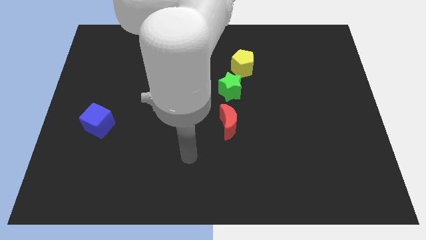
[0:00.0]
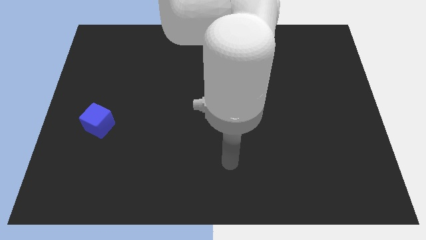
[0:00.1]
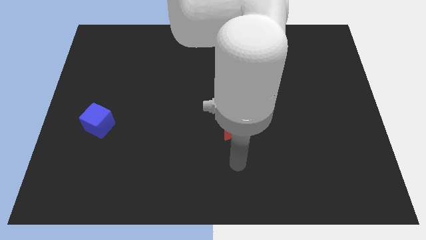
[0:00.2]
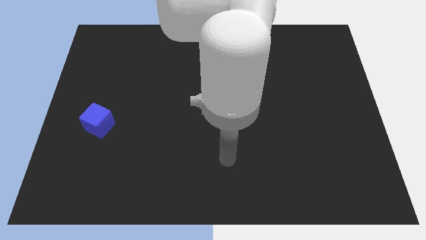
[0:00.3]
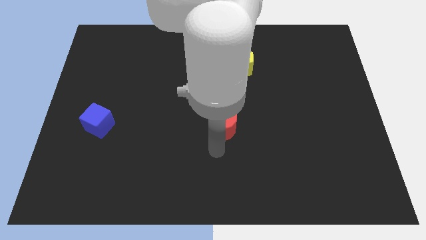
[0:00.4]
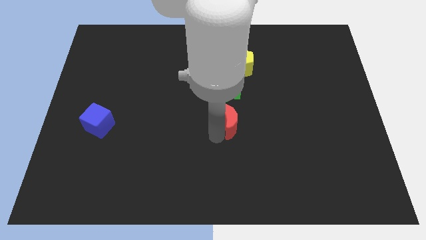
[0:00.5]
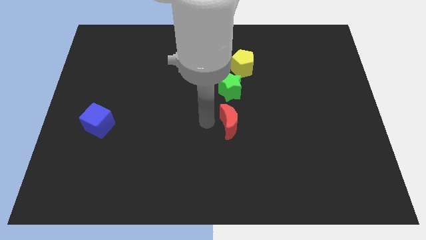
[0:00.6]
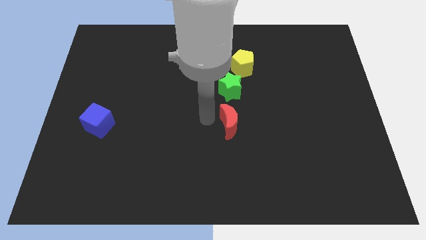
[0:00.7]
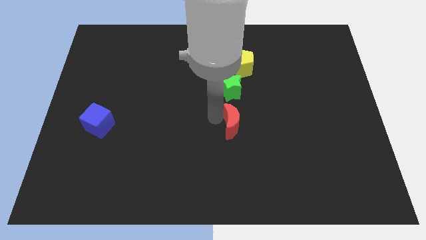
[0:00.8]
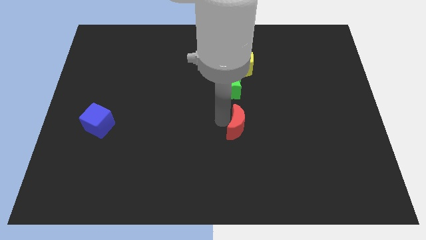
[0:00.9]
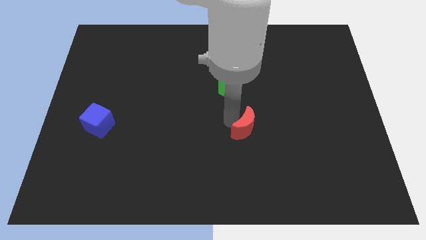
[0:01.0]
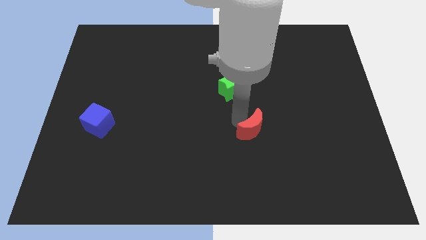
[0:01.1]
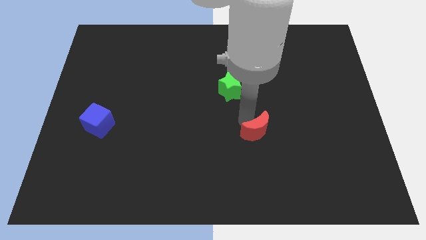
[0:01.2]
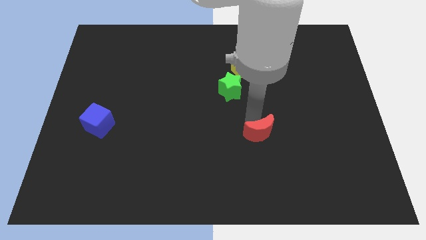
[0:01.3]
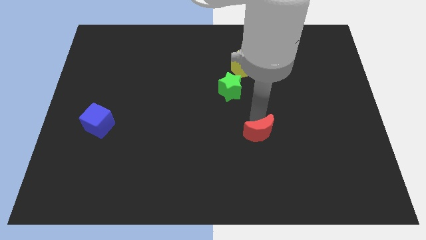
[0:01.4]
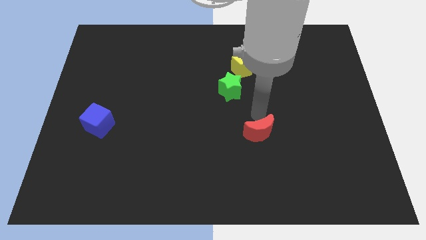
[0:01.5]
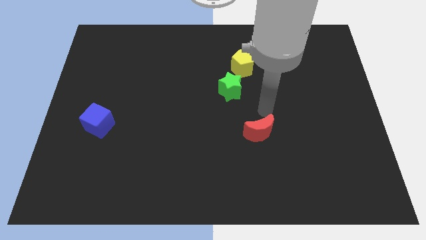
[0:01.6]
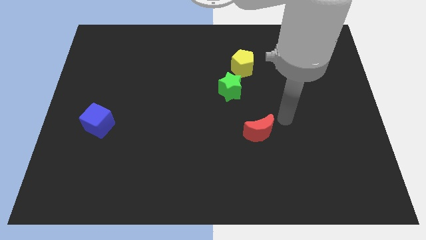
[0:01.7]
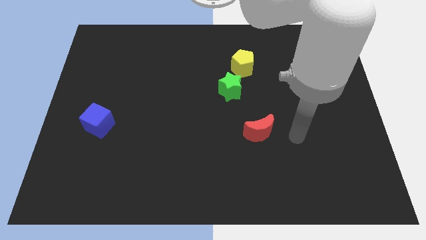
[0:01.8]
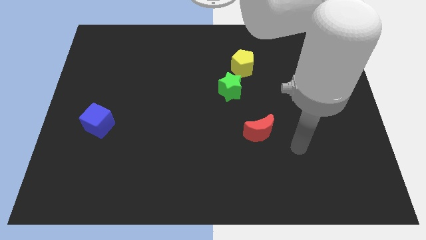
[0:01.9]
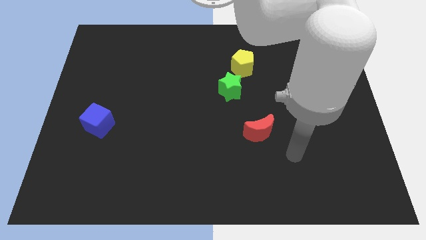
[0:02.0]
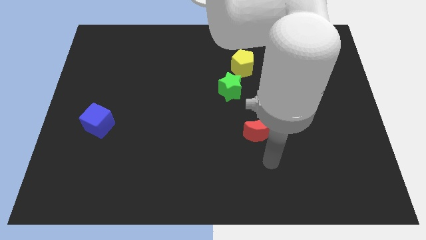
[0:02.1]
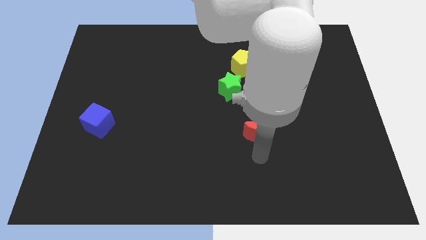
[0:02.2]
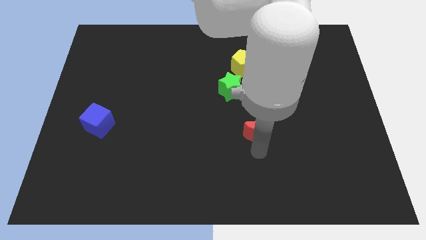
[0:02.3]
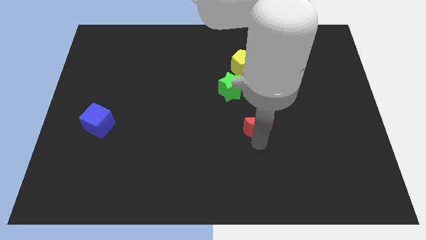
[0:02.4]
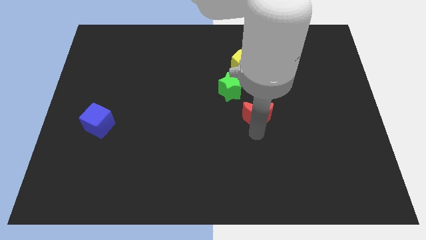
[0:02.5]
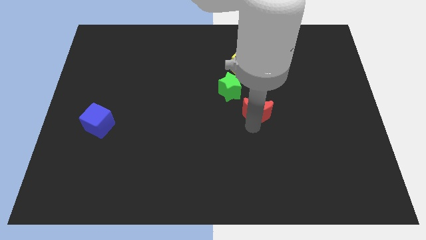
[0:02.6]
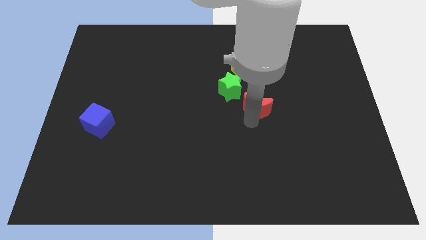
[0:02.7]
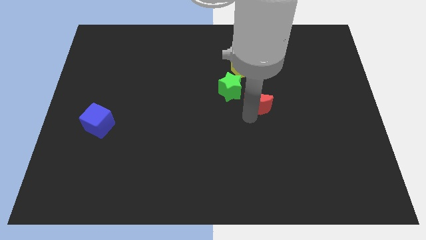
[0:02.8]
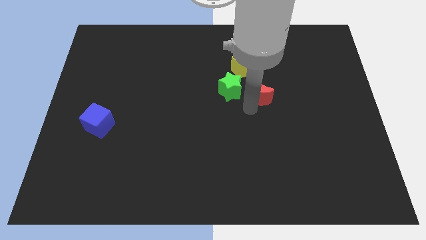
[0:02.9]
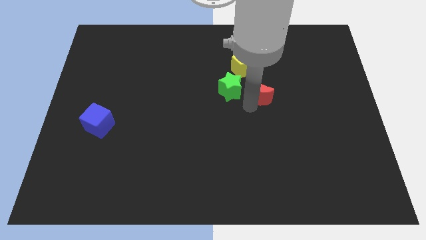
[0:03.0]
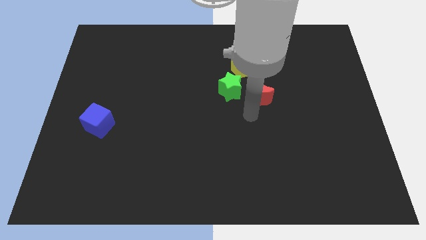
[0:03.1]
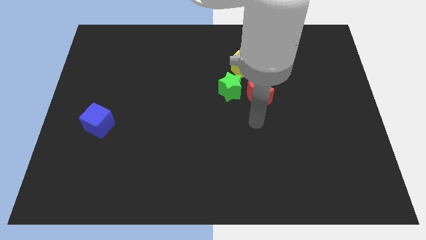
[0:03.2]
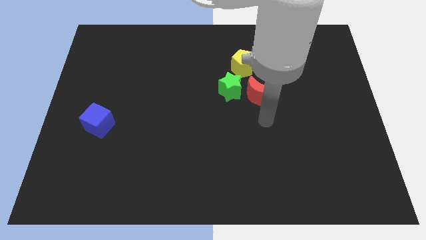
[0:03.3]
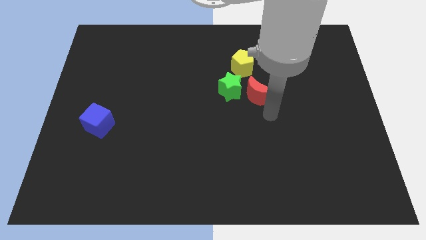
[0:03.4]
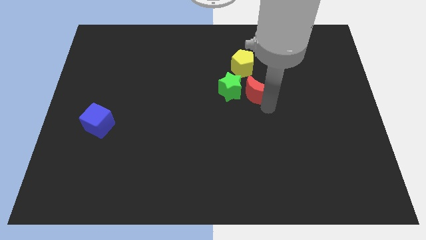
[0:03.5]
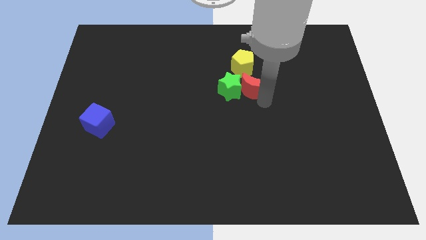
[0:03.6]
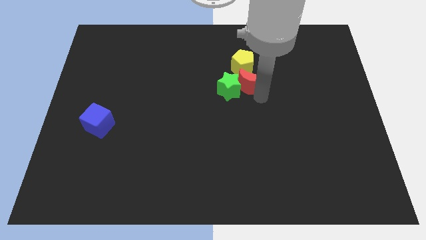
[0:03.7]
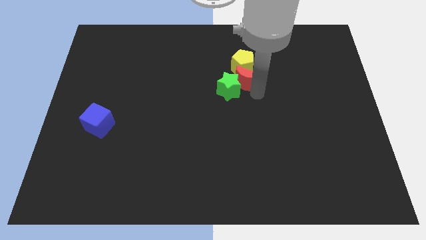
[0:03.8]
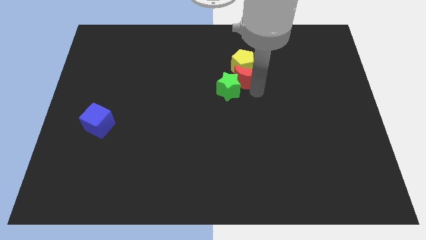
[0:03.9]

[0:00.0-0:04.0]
slide the red block next to the pentagon

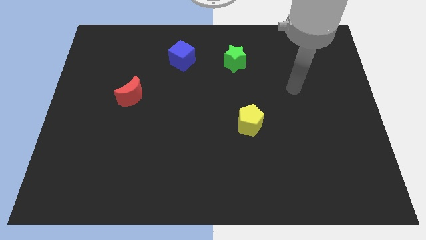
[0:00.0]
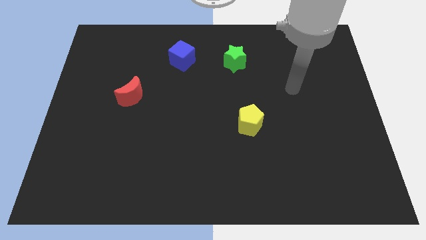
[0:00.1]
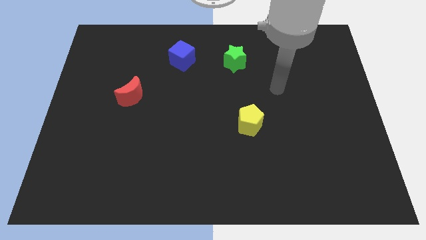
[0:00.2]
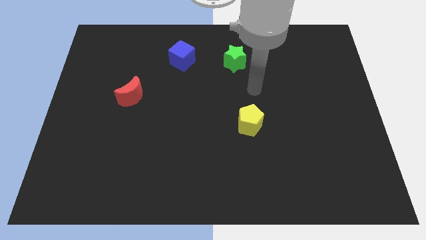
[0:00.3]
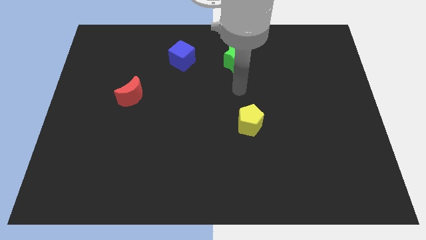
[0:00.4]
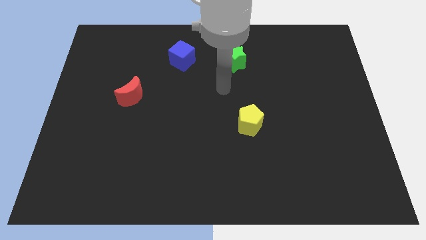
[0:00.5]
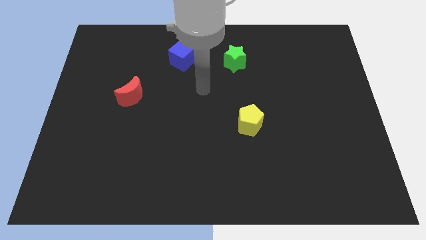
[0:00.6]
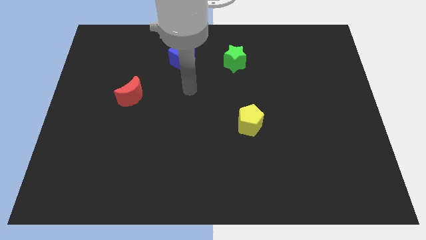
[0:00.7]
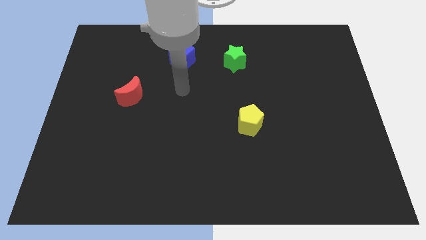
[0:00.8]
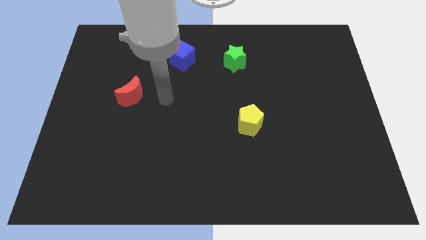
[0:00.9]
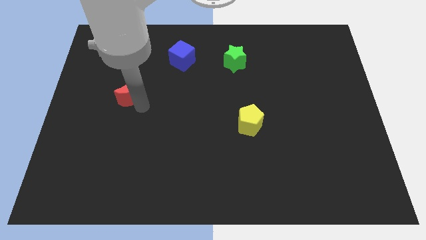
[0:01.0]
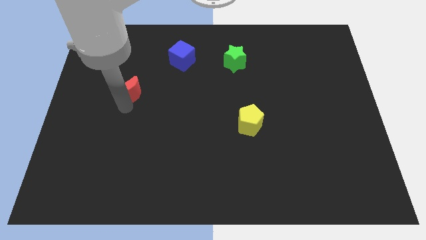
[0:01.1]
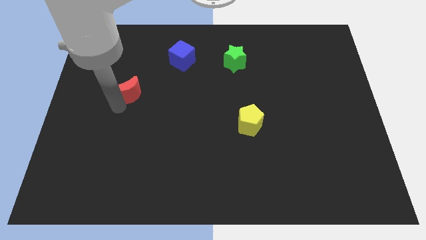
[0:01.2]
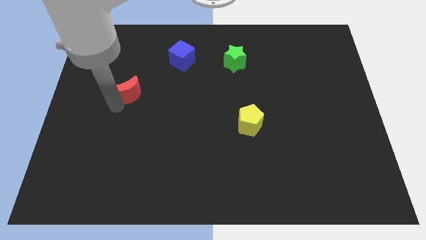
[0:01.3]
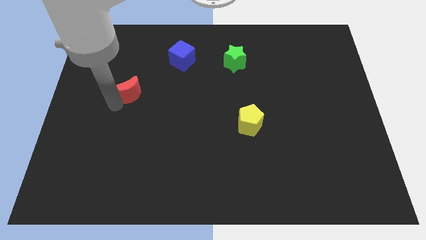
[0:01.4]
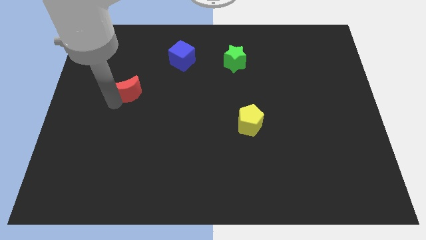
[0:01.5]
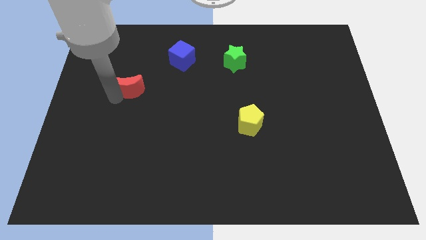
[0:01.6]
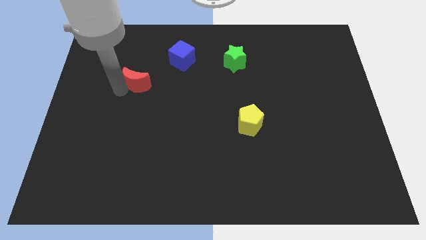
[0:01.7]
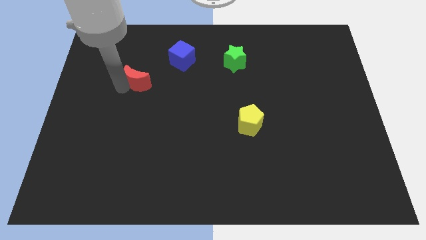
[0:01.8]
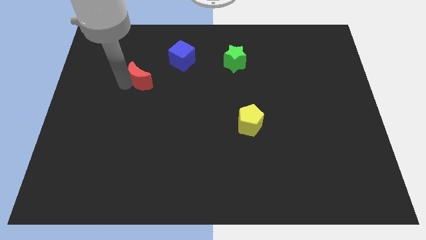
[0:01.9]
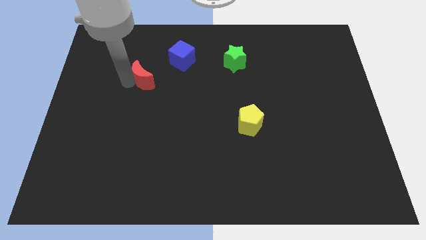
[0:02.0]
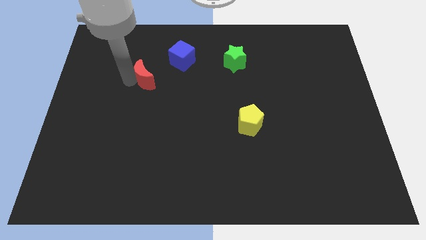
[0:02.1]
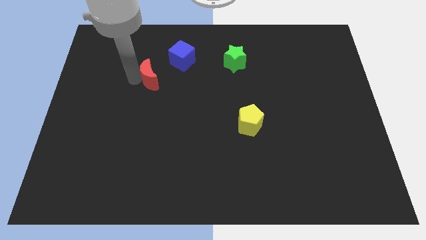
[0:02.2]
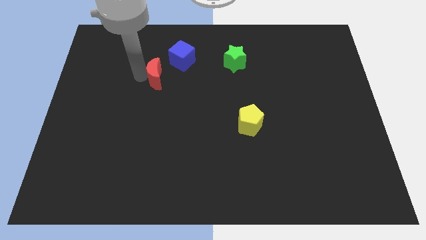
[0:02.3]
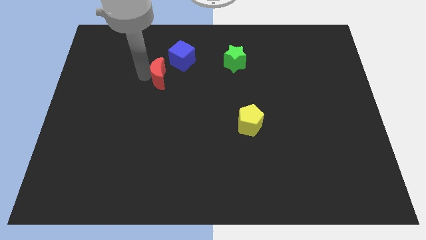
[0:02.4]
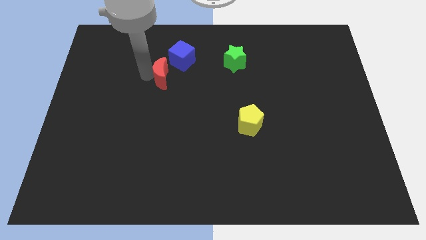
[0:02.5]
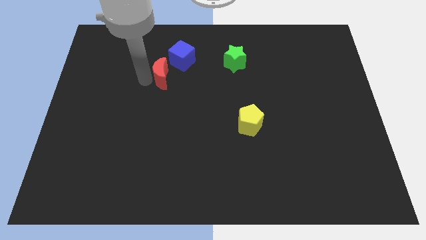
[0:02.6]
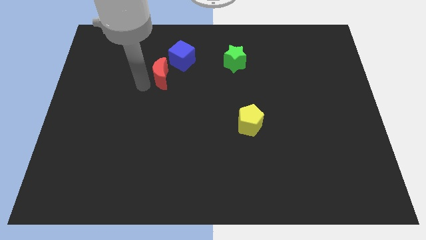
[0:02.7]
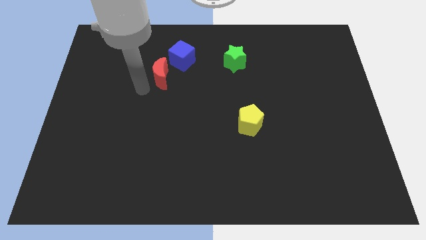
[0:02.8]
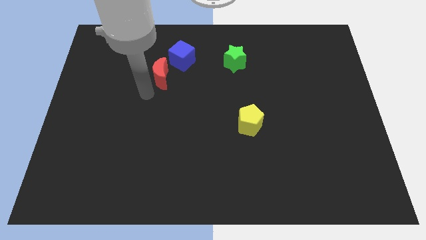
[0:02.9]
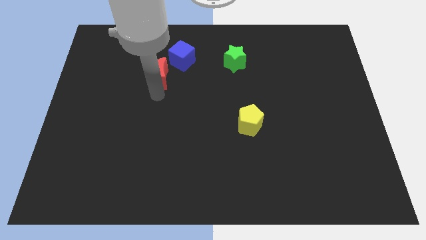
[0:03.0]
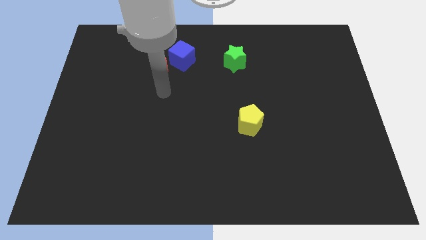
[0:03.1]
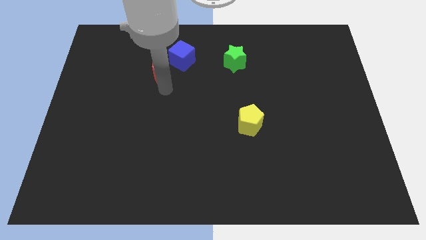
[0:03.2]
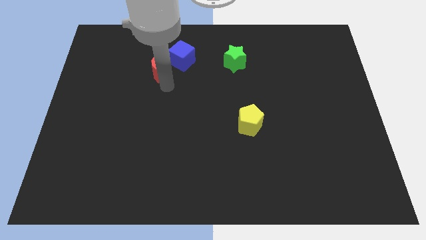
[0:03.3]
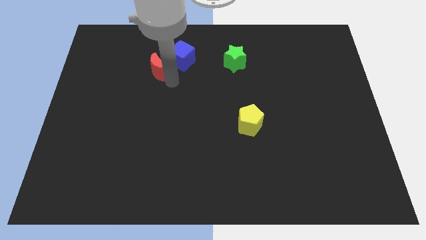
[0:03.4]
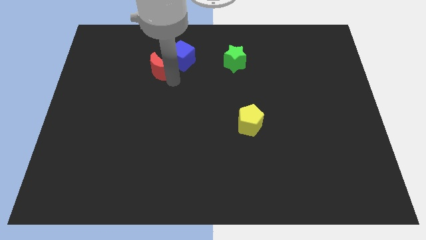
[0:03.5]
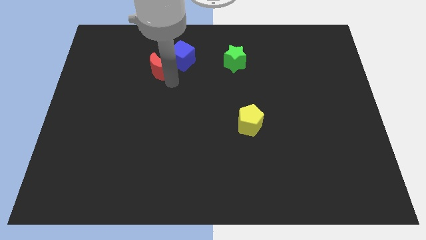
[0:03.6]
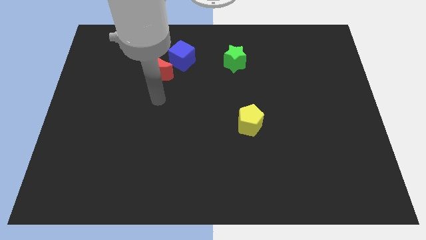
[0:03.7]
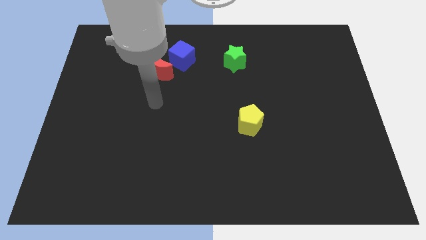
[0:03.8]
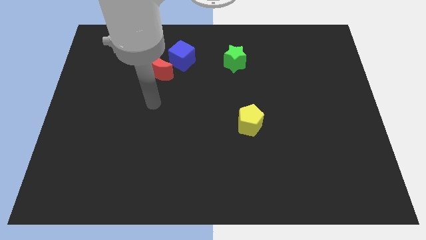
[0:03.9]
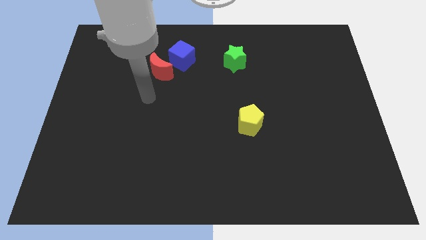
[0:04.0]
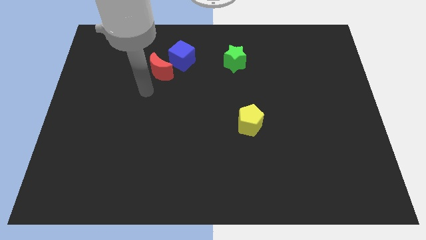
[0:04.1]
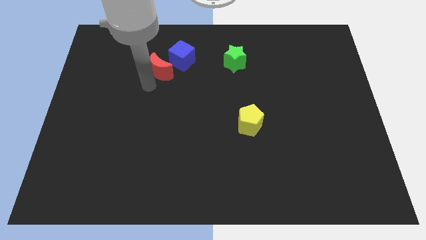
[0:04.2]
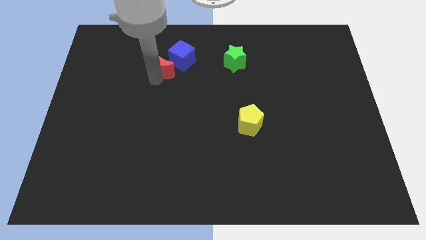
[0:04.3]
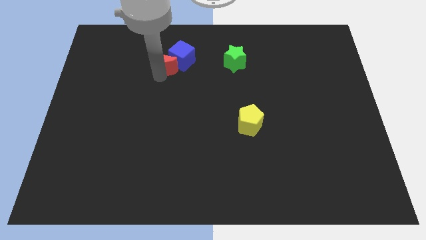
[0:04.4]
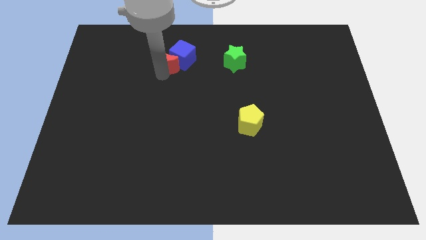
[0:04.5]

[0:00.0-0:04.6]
push the red moon to the cube

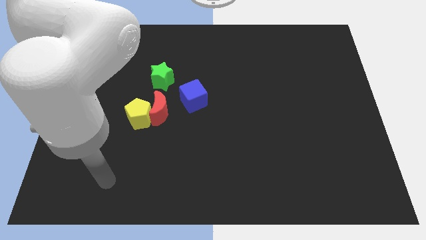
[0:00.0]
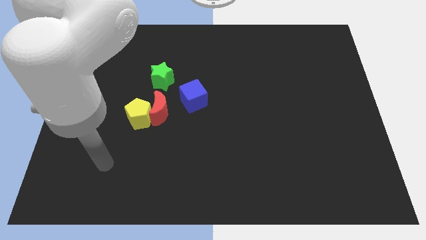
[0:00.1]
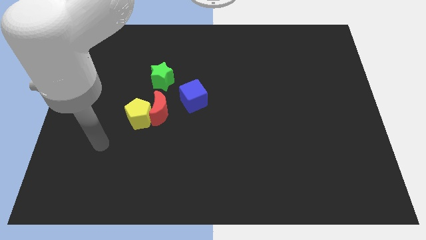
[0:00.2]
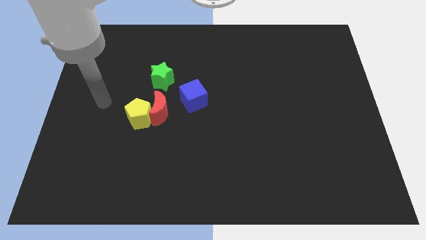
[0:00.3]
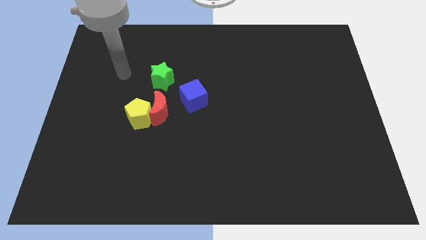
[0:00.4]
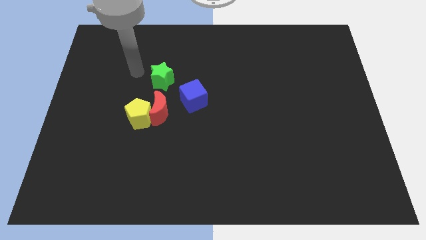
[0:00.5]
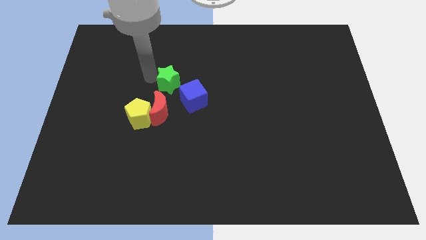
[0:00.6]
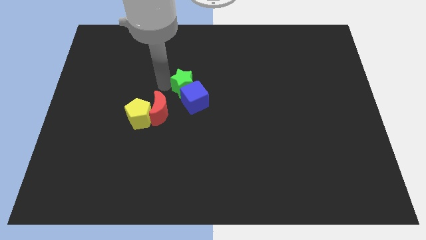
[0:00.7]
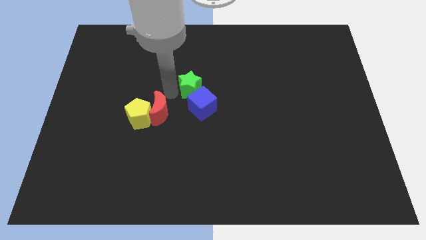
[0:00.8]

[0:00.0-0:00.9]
slide the green block close to the blue block
